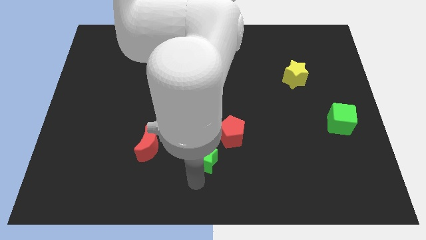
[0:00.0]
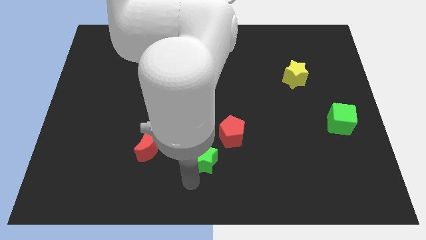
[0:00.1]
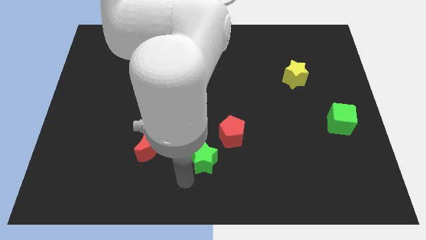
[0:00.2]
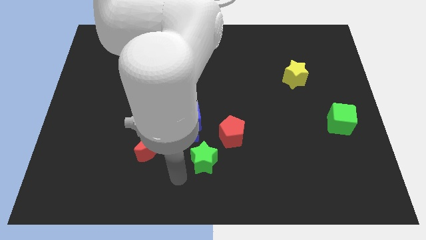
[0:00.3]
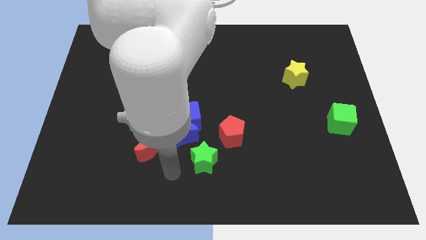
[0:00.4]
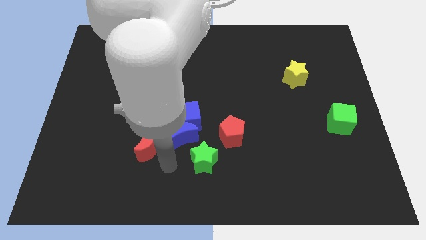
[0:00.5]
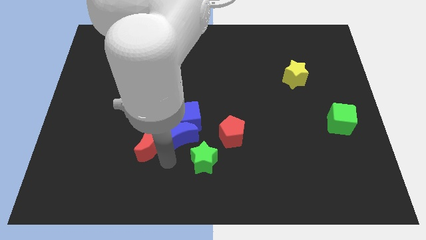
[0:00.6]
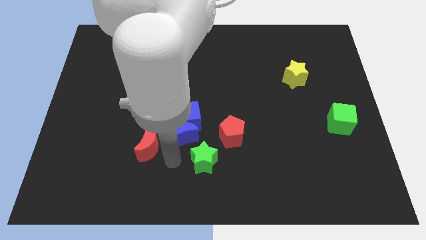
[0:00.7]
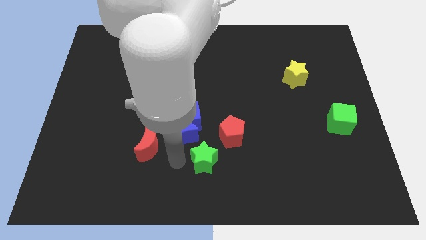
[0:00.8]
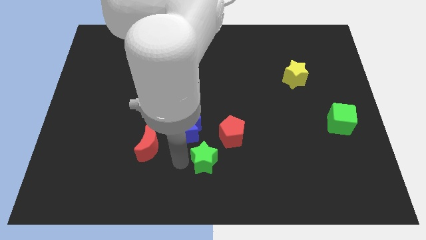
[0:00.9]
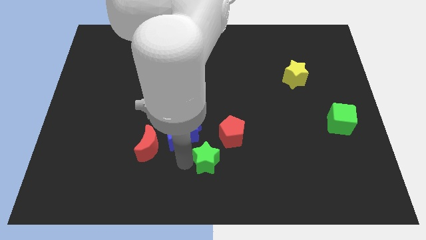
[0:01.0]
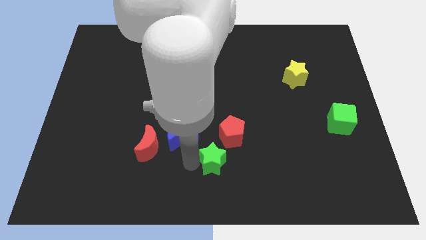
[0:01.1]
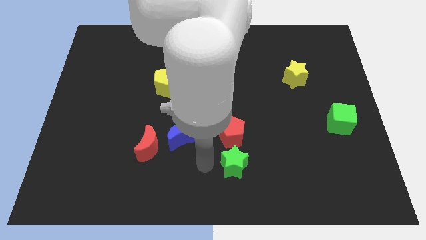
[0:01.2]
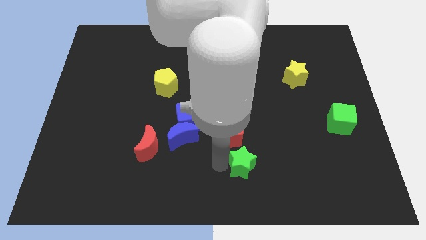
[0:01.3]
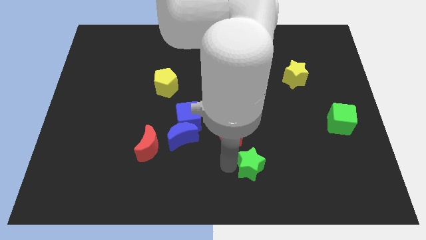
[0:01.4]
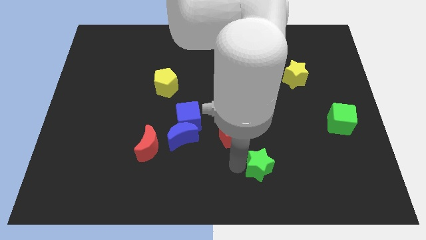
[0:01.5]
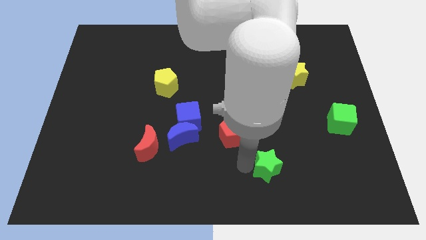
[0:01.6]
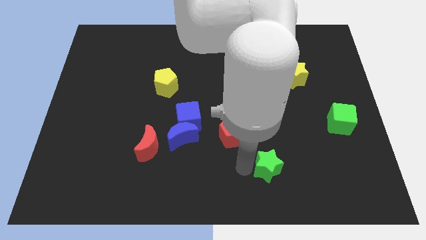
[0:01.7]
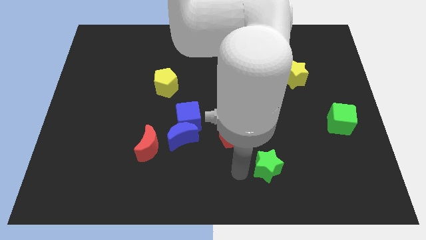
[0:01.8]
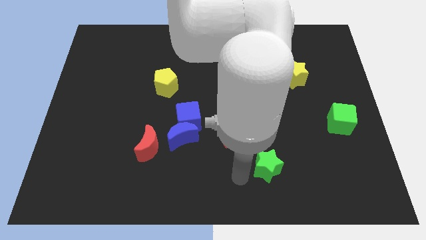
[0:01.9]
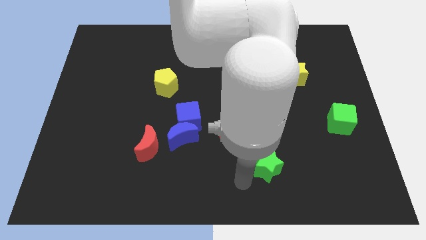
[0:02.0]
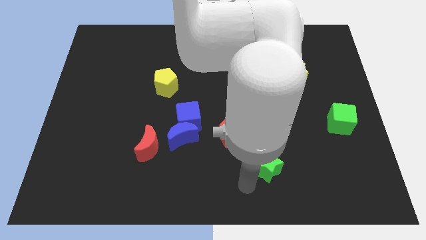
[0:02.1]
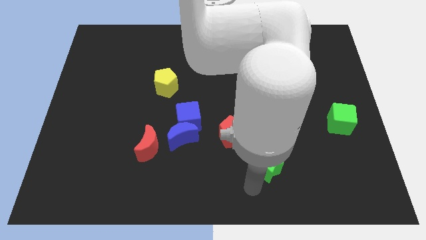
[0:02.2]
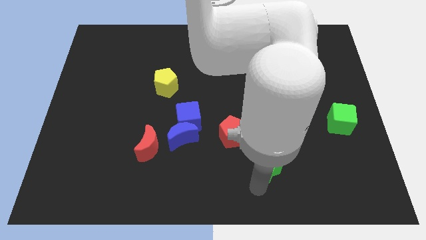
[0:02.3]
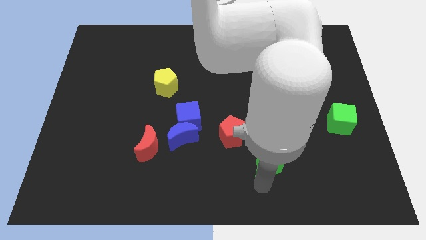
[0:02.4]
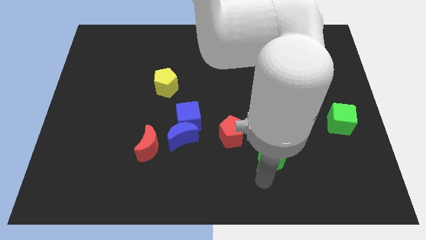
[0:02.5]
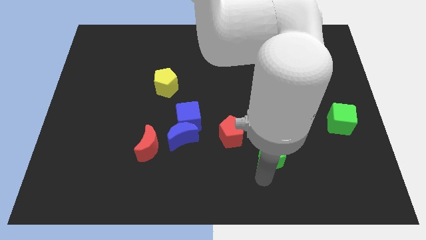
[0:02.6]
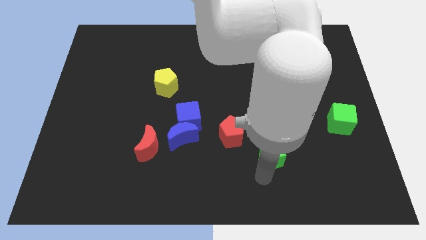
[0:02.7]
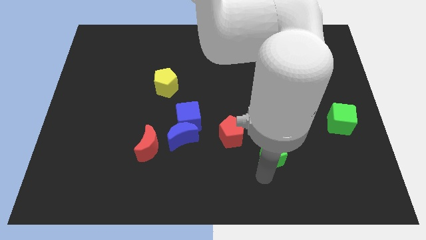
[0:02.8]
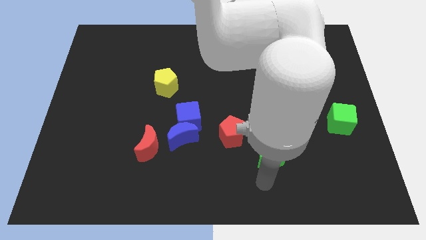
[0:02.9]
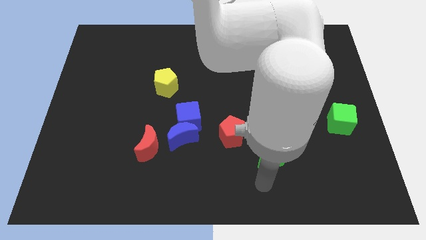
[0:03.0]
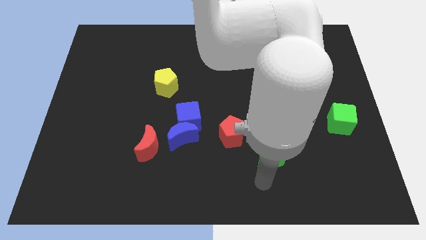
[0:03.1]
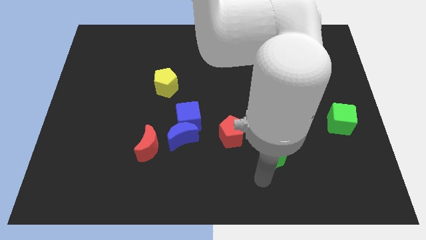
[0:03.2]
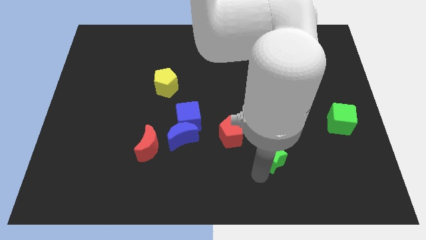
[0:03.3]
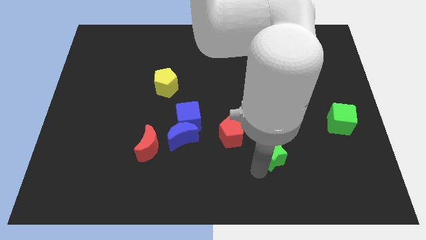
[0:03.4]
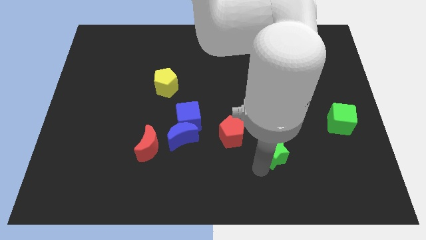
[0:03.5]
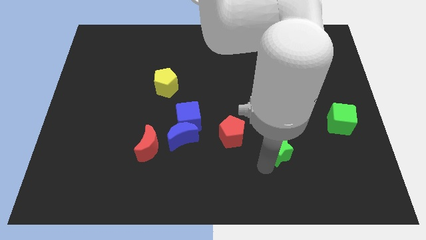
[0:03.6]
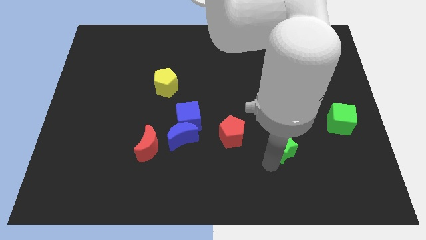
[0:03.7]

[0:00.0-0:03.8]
move the green star to the bottom right of the red pentagon

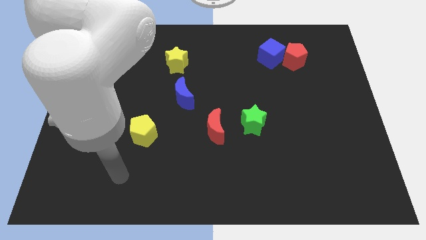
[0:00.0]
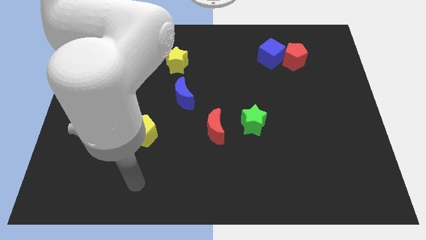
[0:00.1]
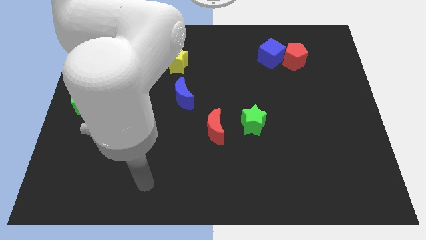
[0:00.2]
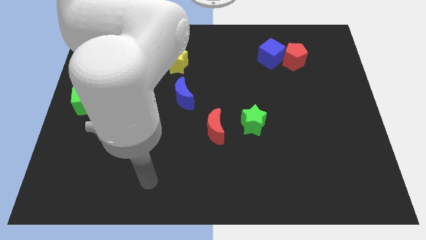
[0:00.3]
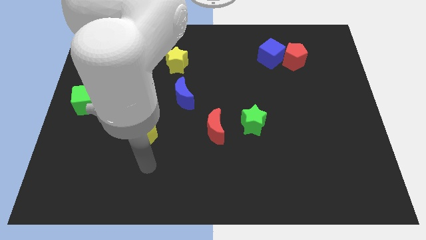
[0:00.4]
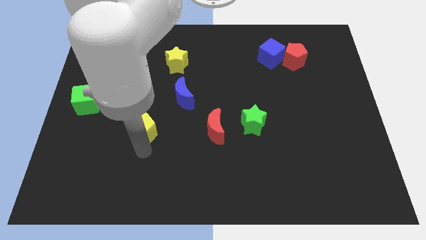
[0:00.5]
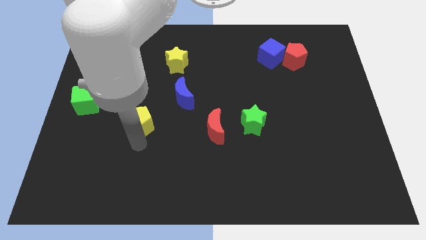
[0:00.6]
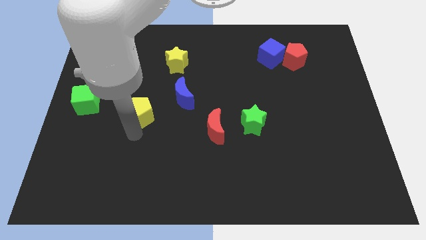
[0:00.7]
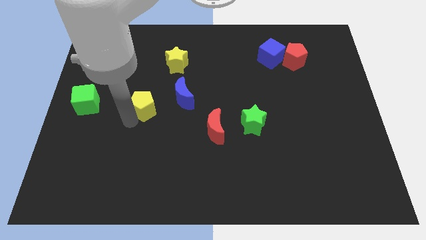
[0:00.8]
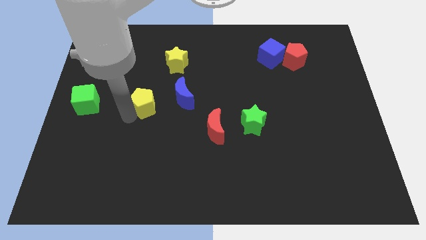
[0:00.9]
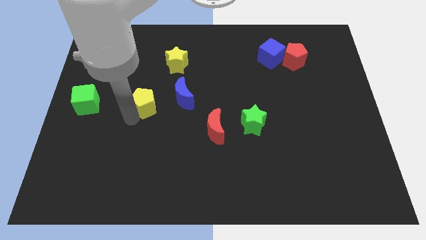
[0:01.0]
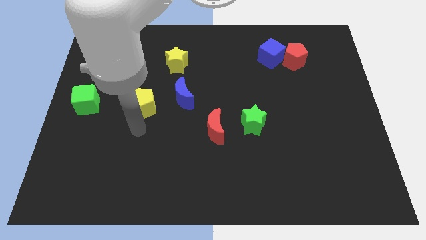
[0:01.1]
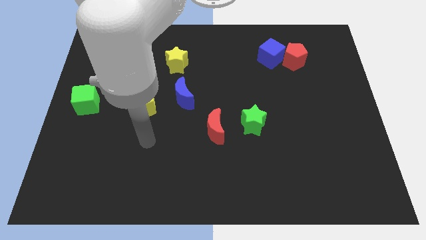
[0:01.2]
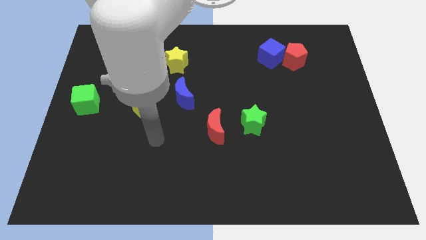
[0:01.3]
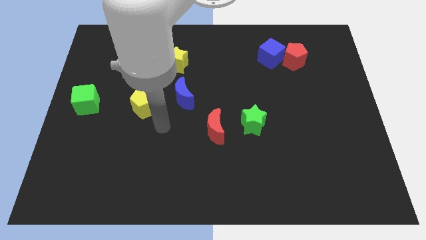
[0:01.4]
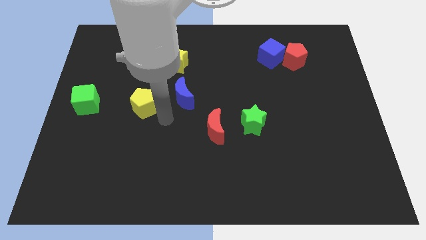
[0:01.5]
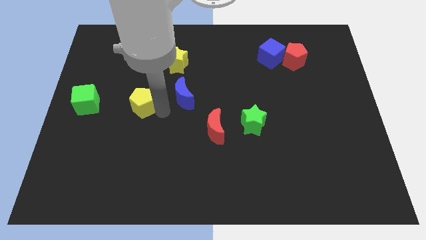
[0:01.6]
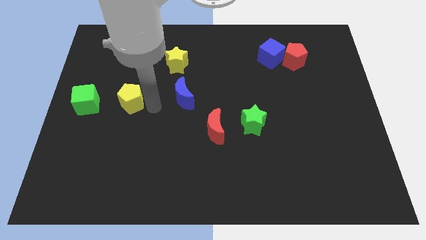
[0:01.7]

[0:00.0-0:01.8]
place the yellow pentagon between the blue moon and green cube

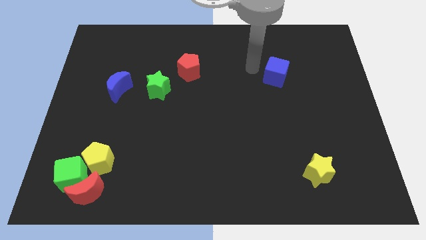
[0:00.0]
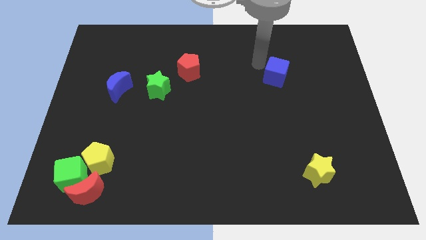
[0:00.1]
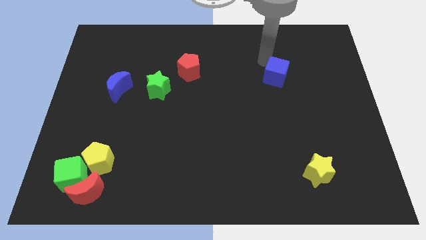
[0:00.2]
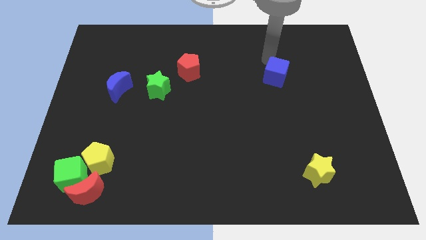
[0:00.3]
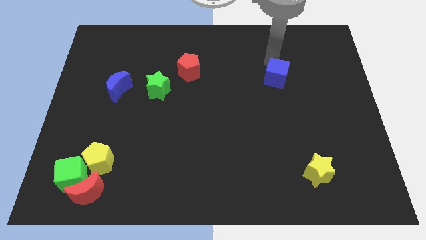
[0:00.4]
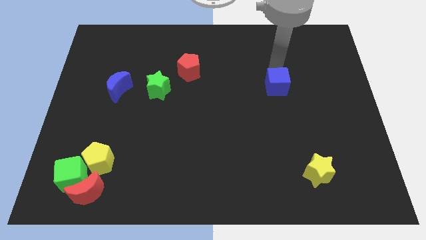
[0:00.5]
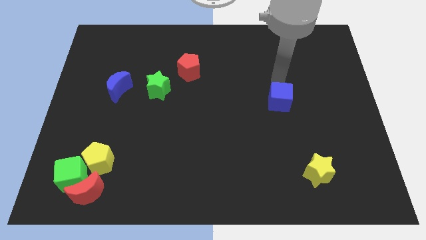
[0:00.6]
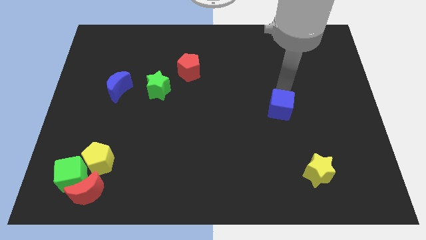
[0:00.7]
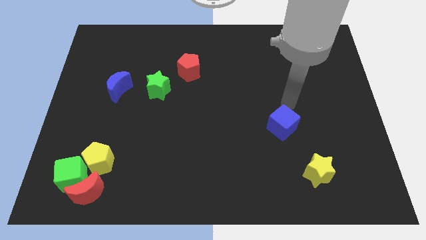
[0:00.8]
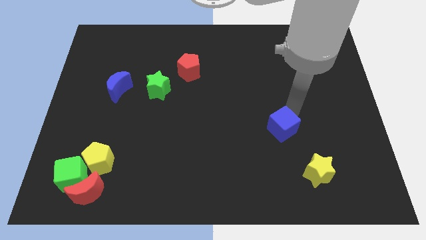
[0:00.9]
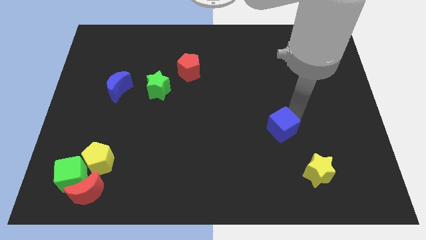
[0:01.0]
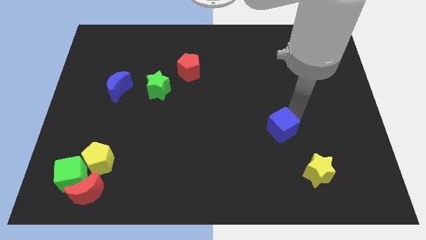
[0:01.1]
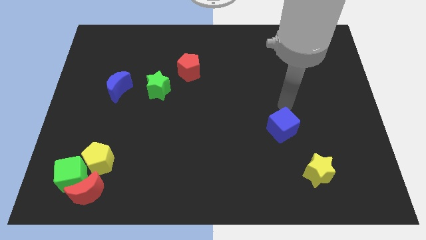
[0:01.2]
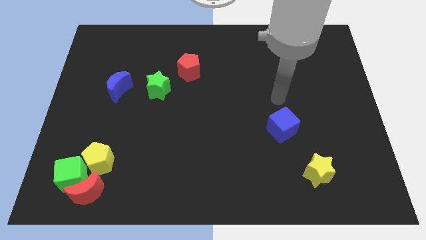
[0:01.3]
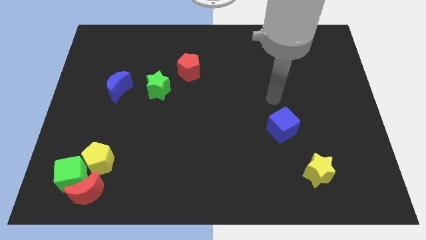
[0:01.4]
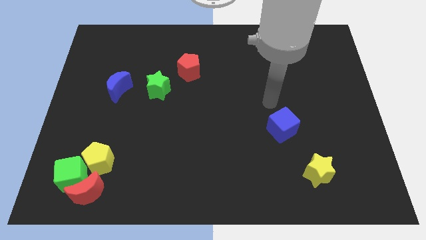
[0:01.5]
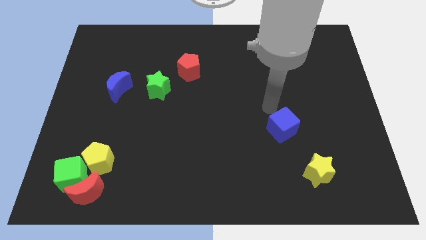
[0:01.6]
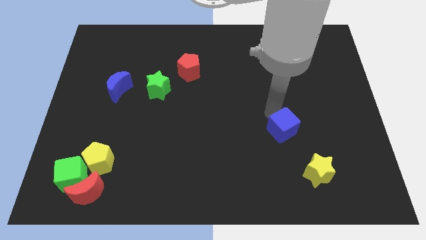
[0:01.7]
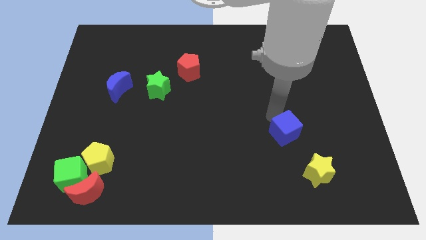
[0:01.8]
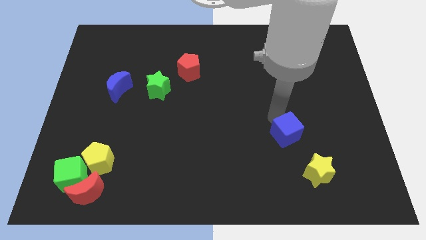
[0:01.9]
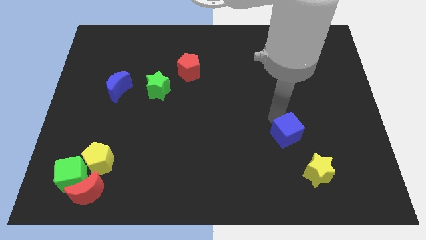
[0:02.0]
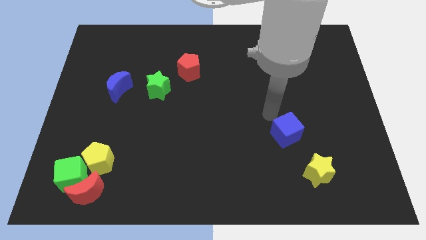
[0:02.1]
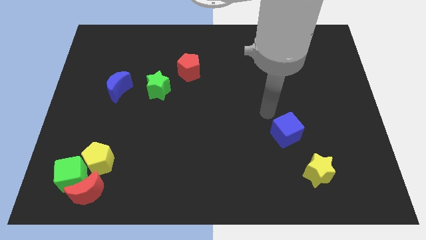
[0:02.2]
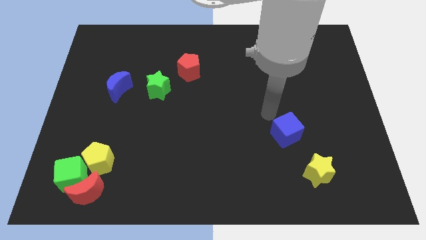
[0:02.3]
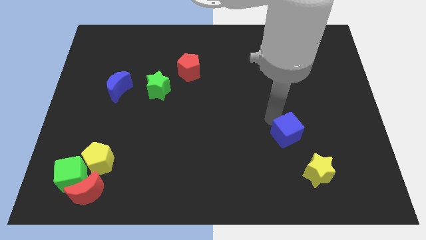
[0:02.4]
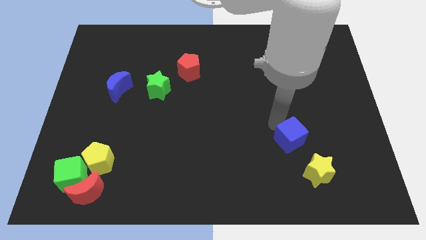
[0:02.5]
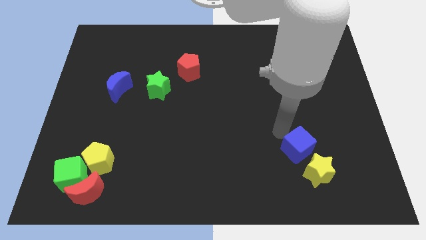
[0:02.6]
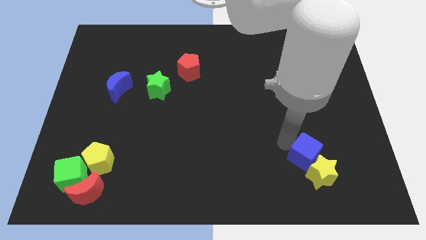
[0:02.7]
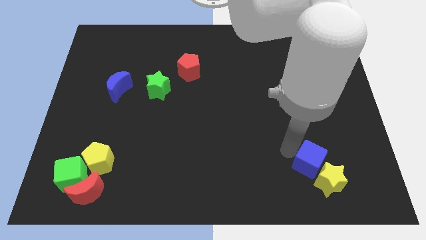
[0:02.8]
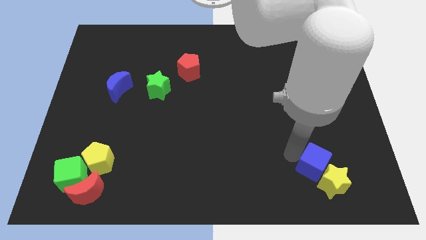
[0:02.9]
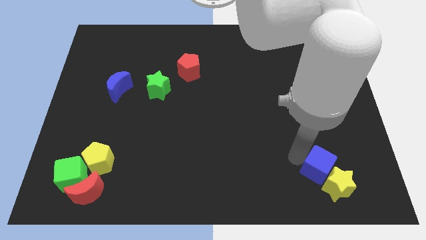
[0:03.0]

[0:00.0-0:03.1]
push blue cube in to green star
